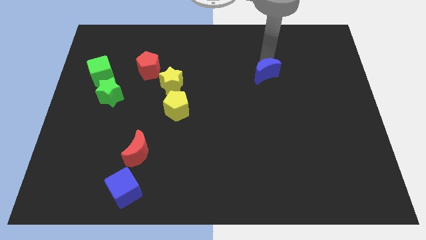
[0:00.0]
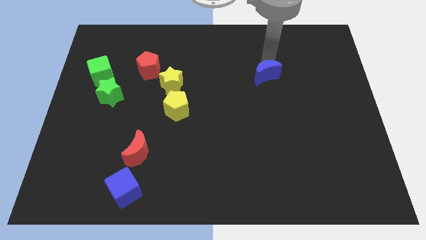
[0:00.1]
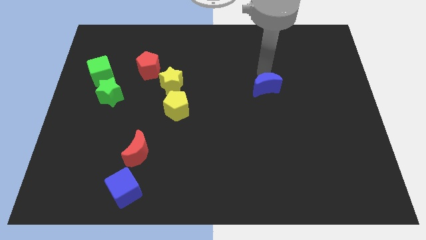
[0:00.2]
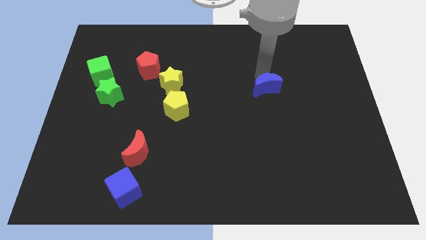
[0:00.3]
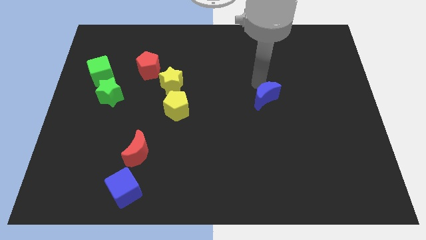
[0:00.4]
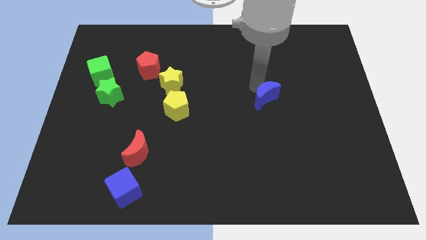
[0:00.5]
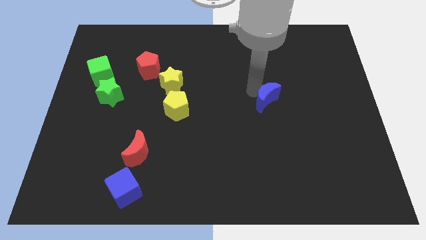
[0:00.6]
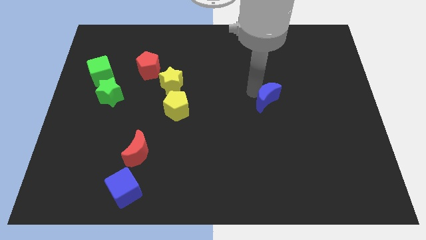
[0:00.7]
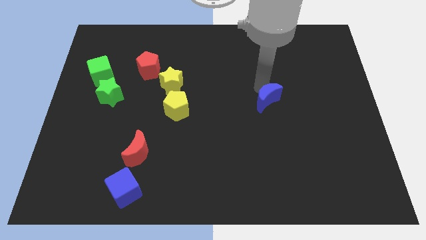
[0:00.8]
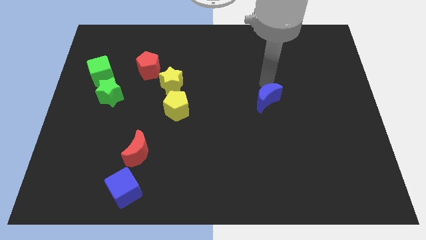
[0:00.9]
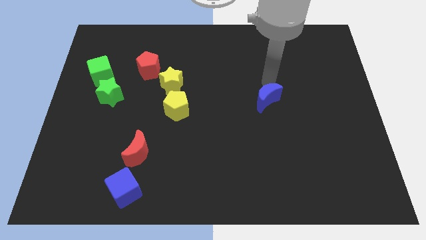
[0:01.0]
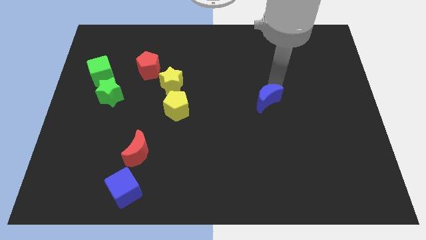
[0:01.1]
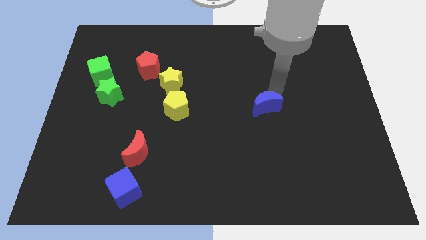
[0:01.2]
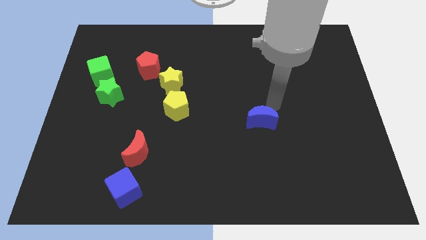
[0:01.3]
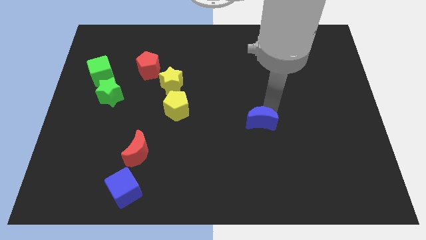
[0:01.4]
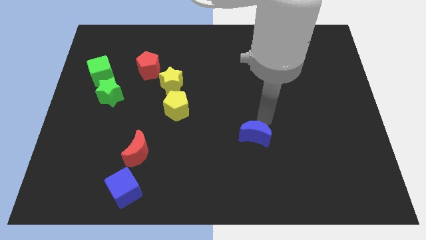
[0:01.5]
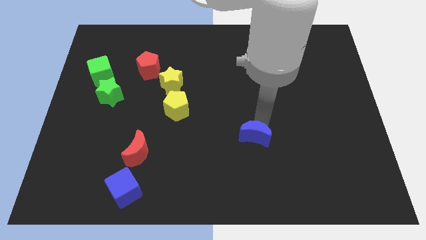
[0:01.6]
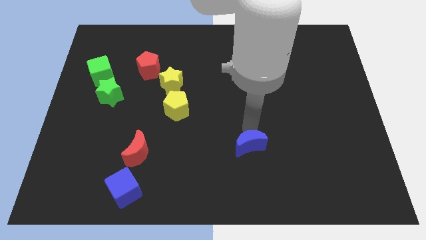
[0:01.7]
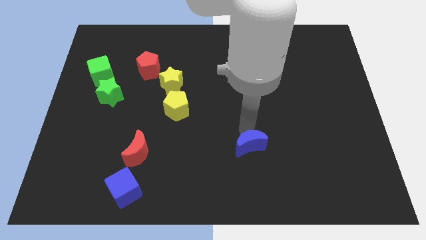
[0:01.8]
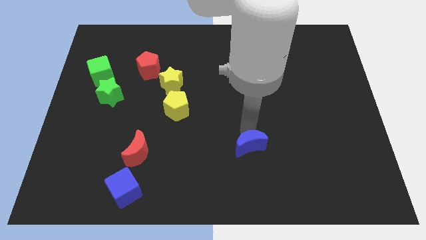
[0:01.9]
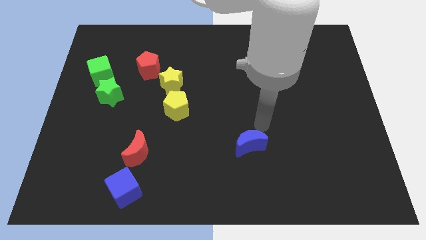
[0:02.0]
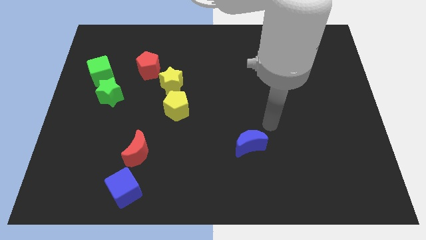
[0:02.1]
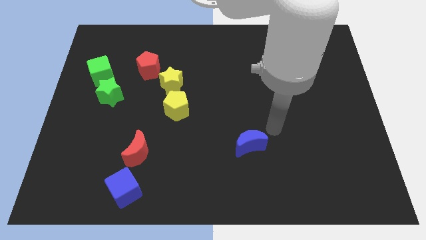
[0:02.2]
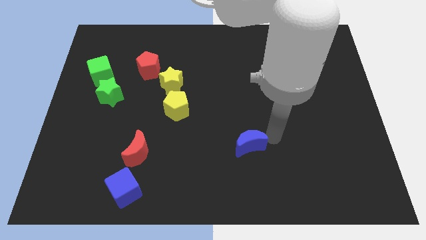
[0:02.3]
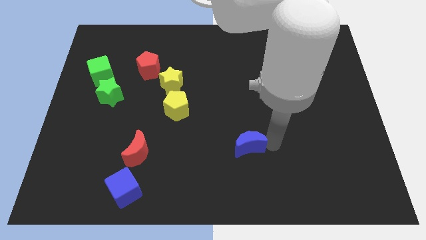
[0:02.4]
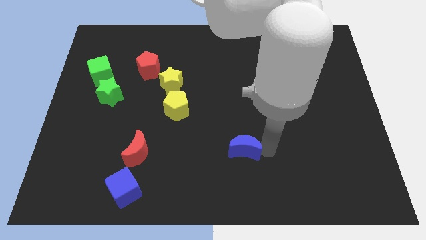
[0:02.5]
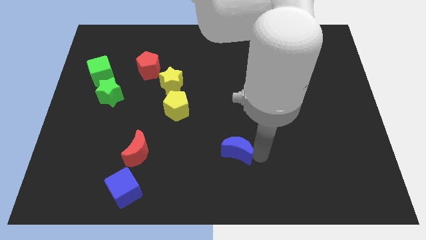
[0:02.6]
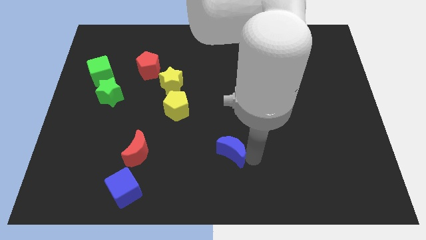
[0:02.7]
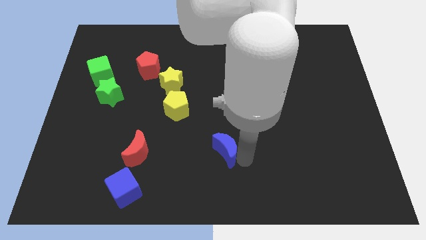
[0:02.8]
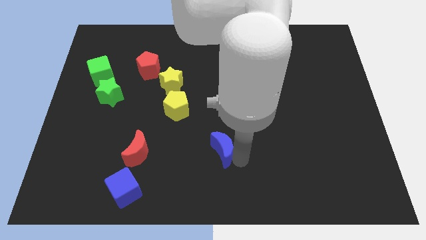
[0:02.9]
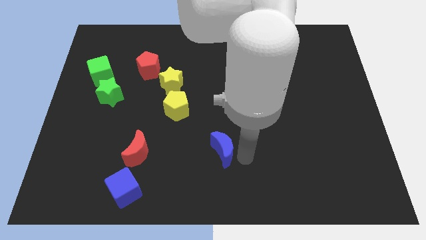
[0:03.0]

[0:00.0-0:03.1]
push blue moon to the bottom center

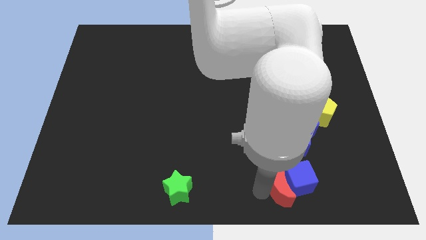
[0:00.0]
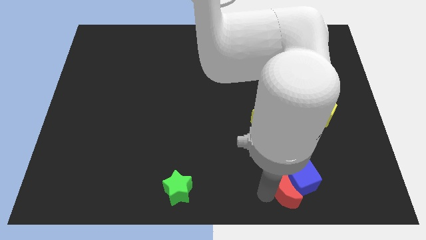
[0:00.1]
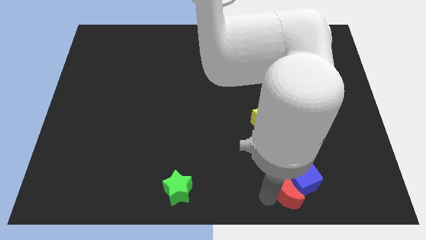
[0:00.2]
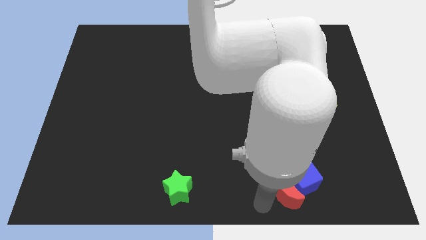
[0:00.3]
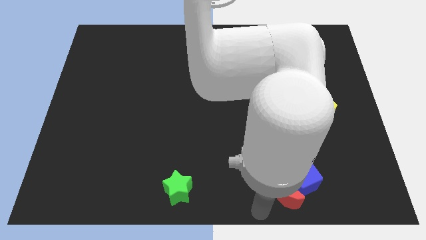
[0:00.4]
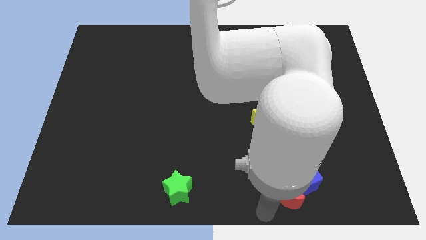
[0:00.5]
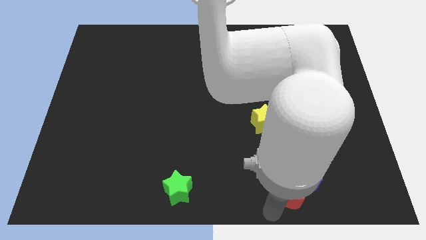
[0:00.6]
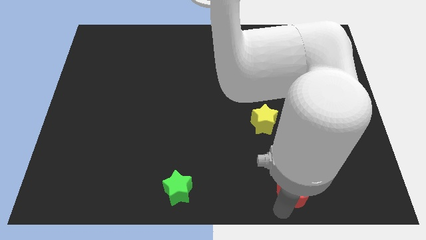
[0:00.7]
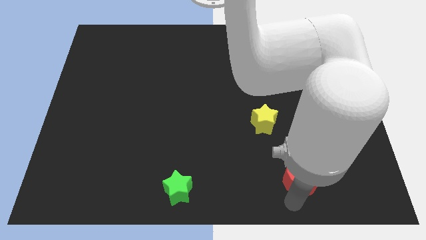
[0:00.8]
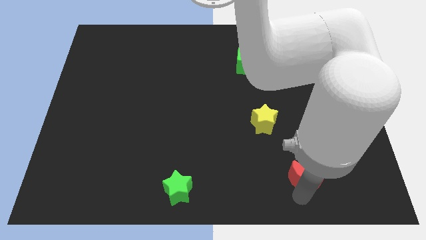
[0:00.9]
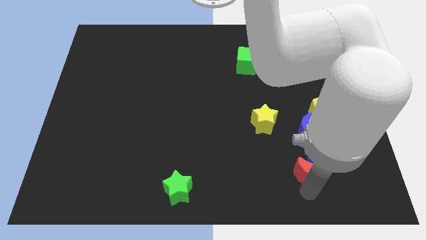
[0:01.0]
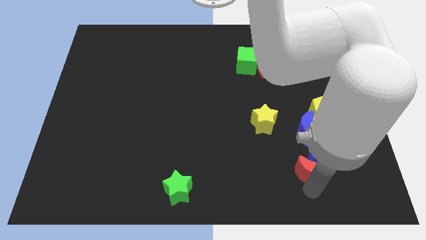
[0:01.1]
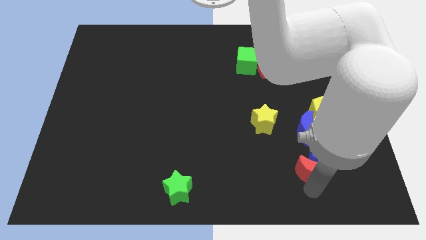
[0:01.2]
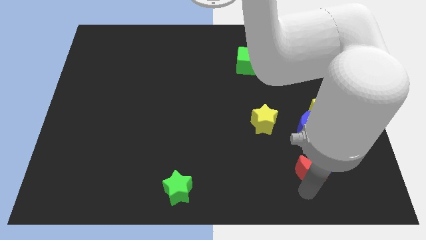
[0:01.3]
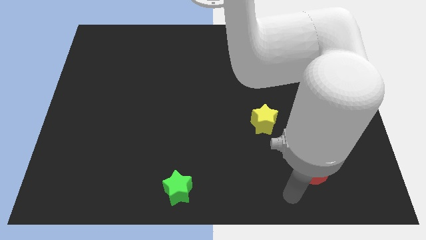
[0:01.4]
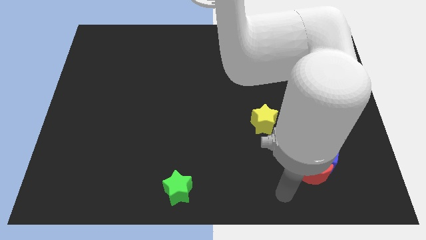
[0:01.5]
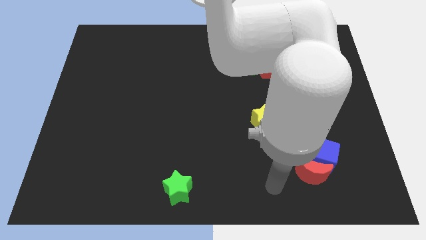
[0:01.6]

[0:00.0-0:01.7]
move the red crescent and the blue cube to the bottom right side of the blue crescent

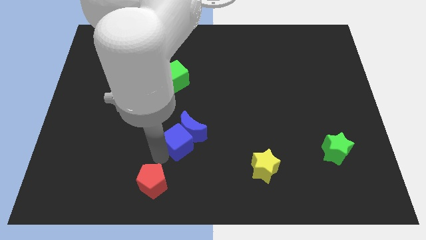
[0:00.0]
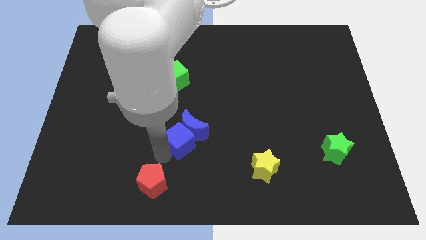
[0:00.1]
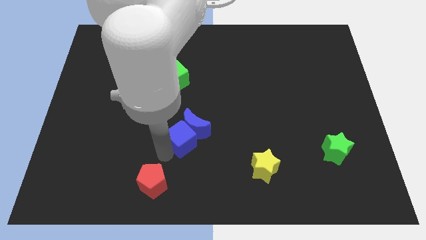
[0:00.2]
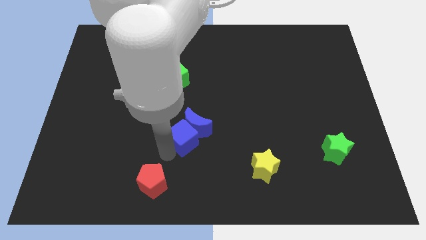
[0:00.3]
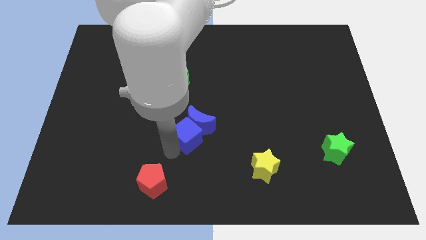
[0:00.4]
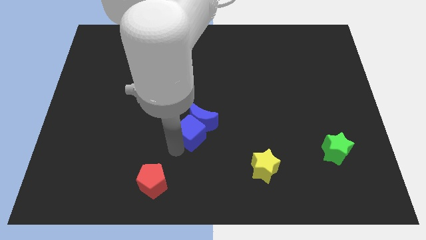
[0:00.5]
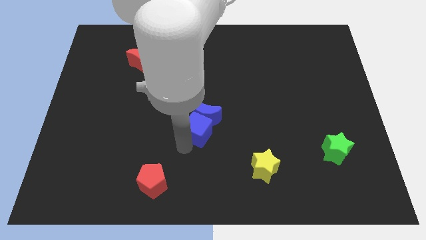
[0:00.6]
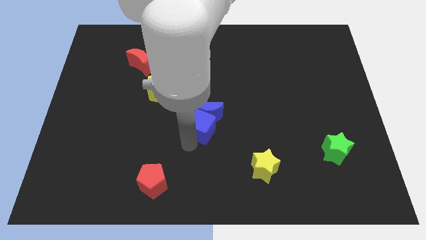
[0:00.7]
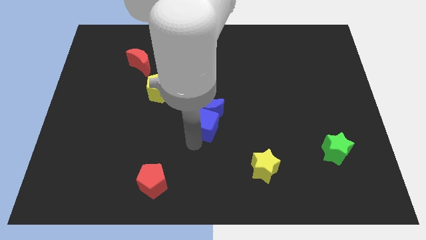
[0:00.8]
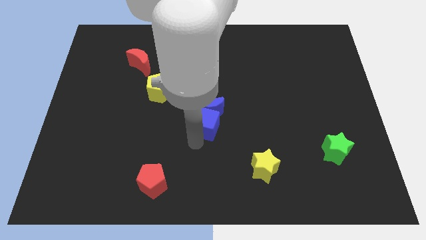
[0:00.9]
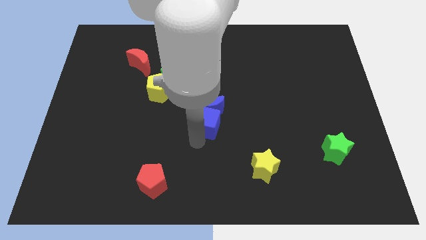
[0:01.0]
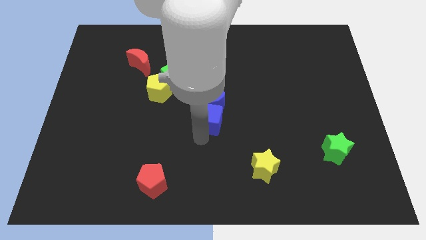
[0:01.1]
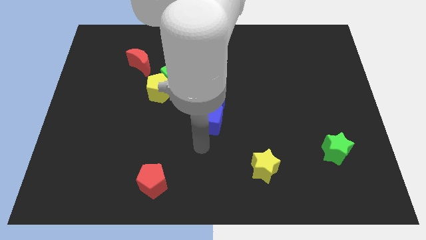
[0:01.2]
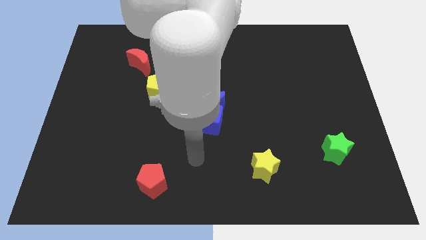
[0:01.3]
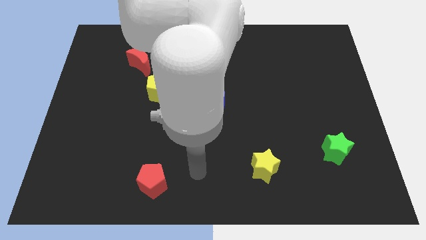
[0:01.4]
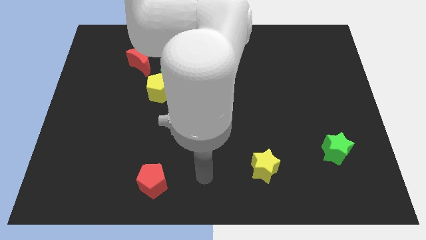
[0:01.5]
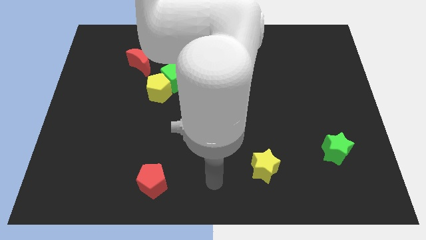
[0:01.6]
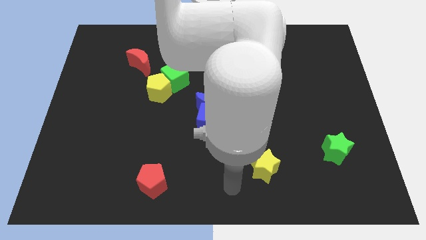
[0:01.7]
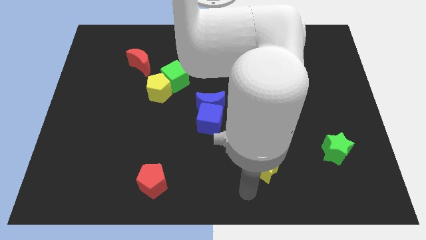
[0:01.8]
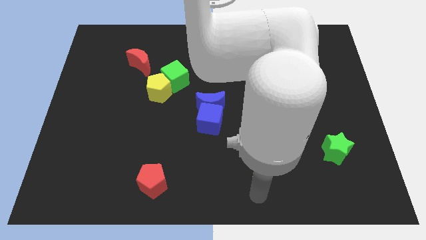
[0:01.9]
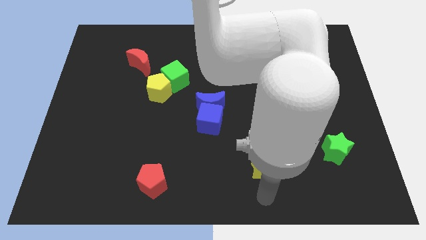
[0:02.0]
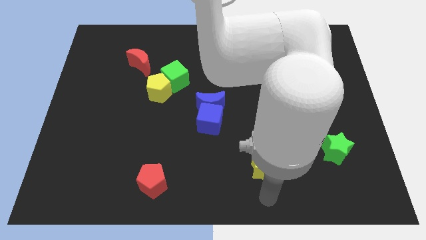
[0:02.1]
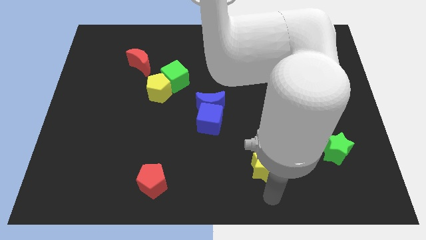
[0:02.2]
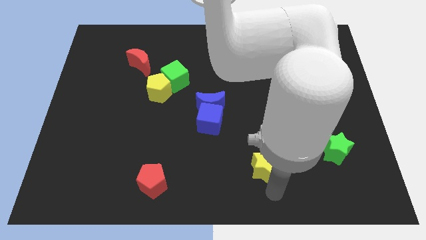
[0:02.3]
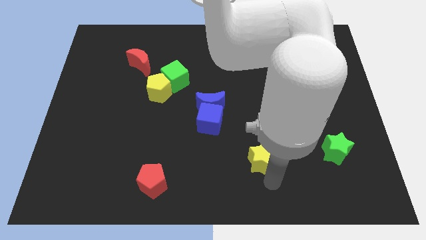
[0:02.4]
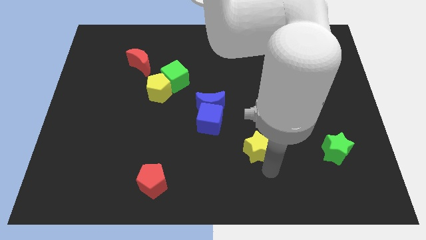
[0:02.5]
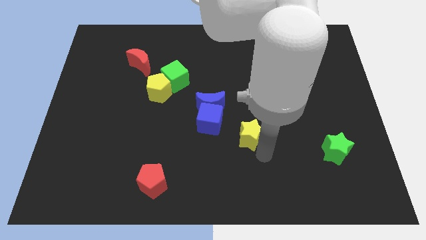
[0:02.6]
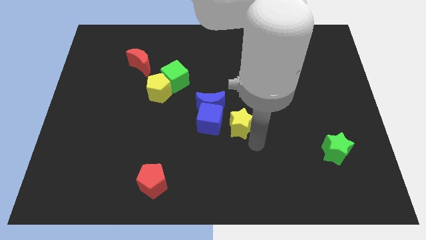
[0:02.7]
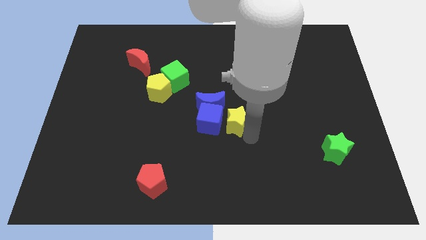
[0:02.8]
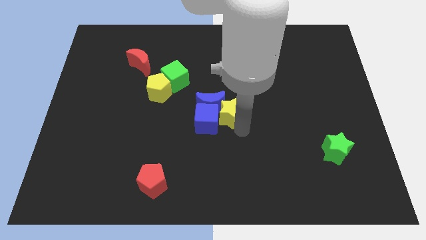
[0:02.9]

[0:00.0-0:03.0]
place yellow star near to blue cube

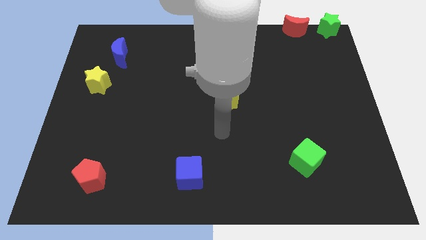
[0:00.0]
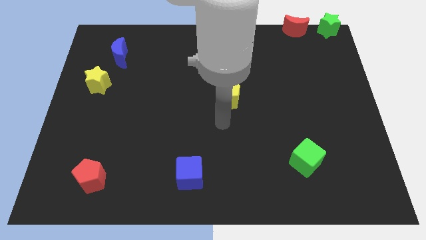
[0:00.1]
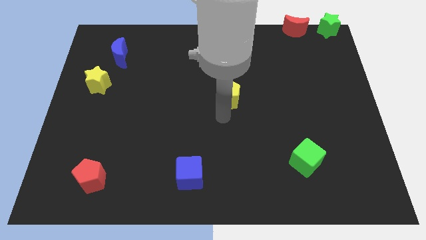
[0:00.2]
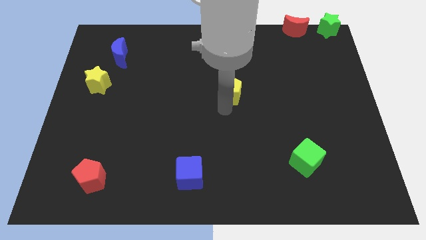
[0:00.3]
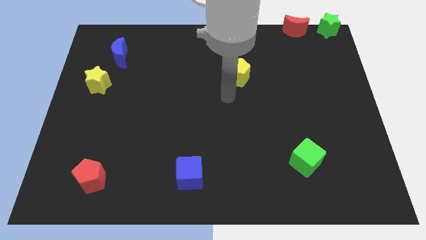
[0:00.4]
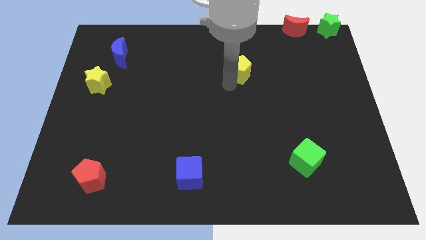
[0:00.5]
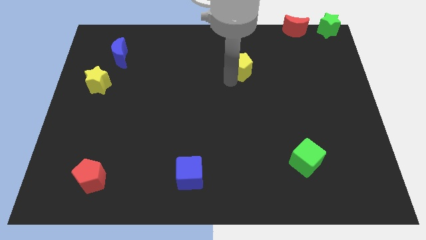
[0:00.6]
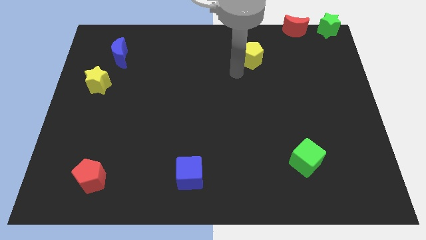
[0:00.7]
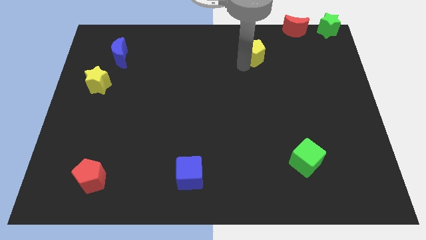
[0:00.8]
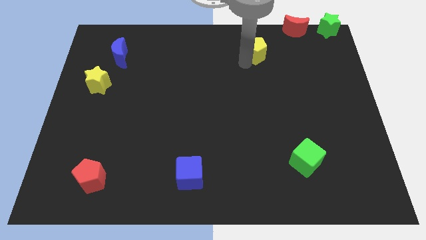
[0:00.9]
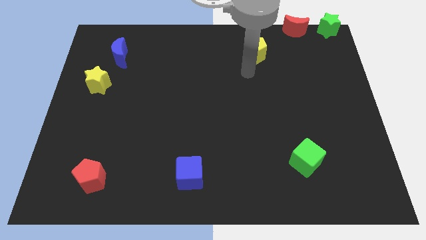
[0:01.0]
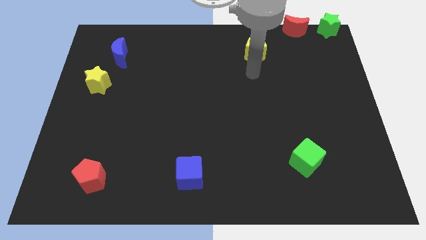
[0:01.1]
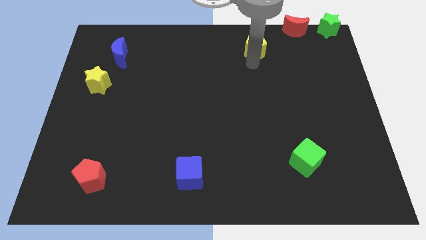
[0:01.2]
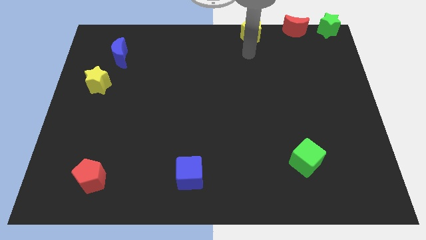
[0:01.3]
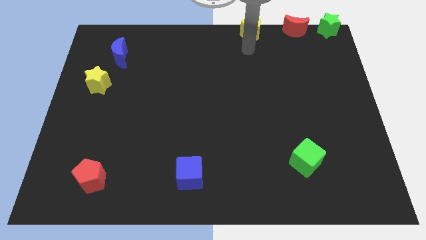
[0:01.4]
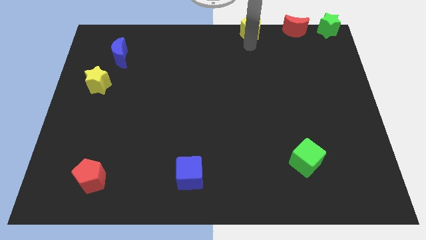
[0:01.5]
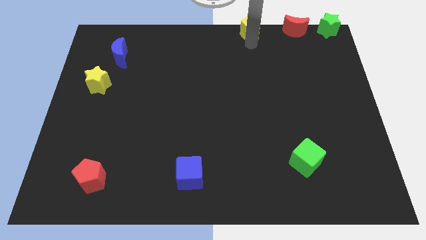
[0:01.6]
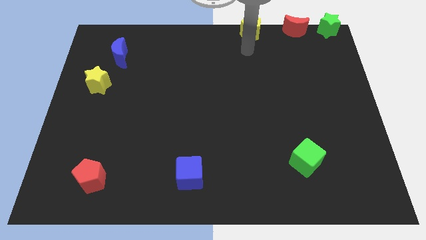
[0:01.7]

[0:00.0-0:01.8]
push the yellow pentagon towards the top of the board
